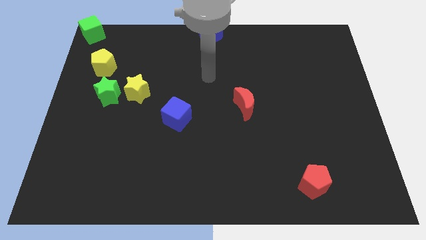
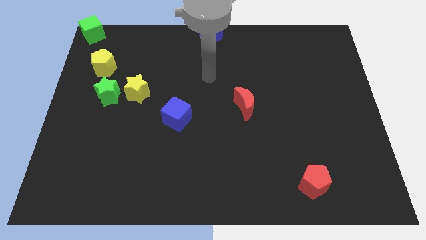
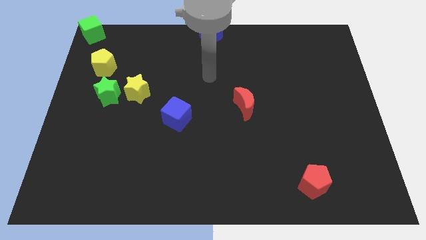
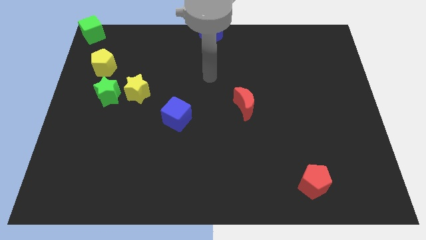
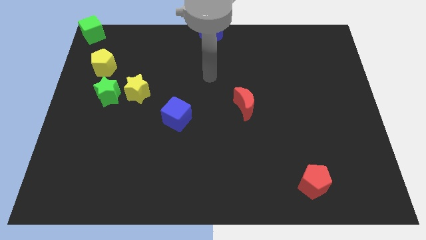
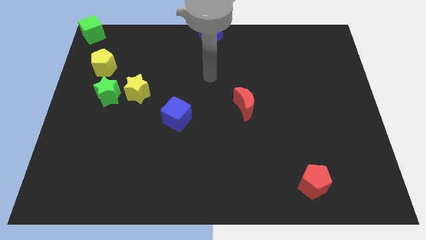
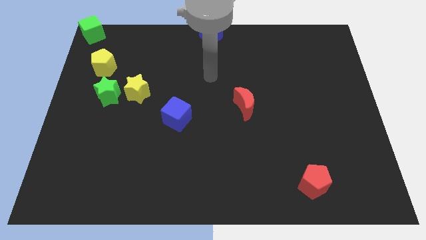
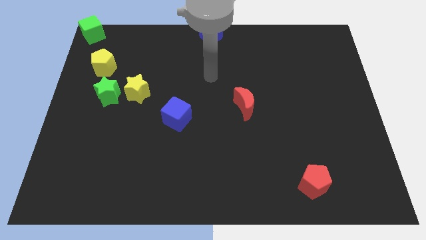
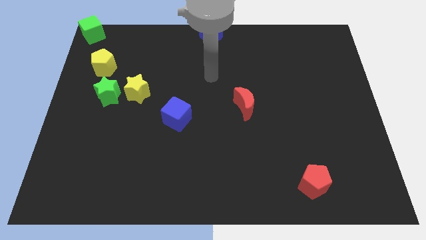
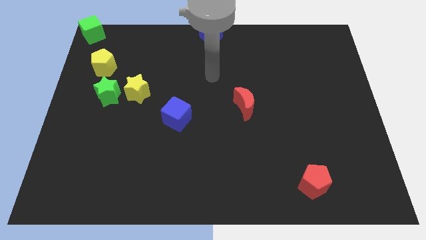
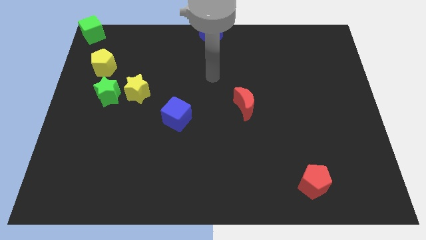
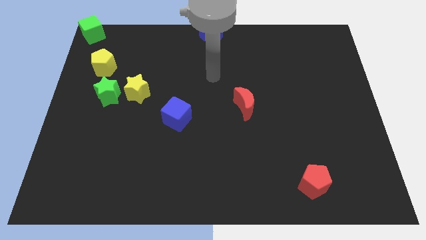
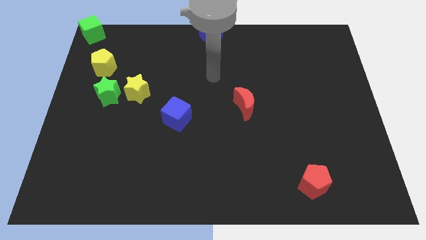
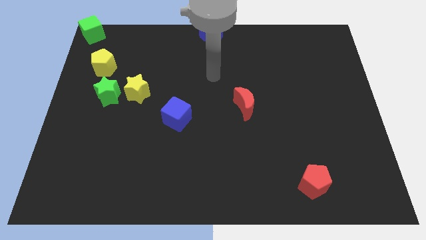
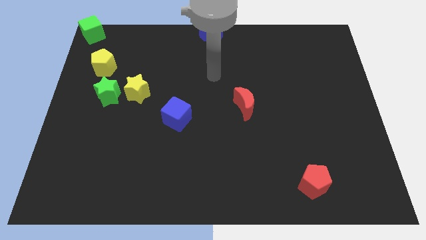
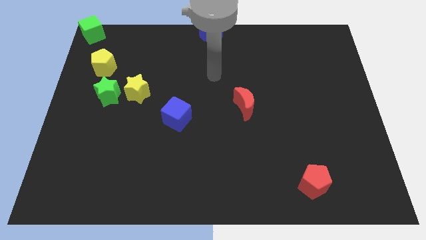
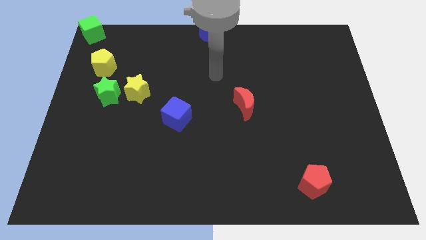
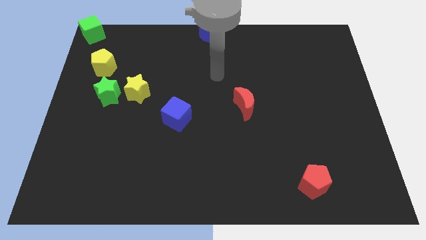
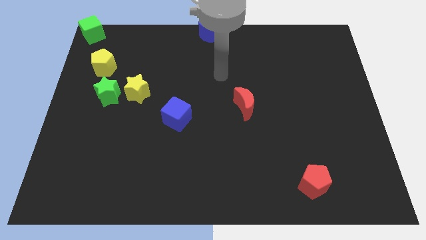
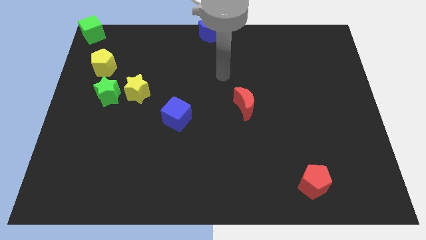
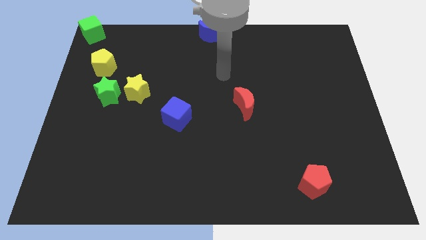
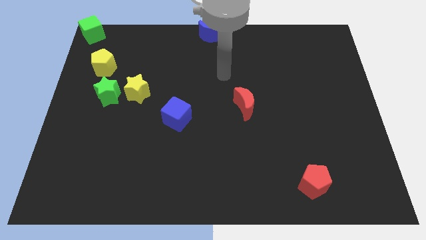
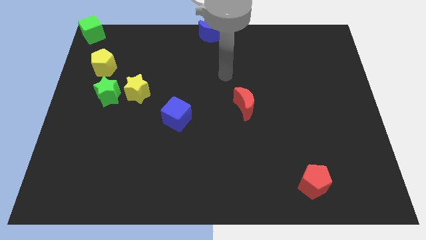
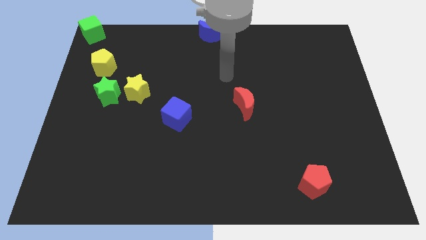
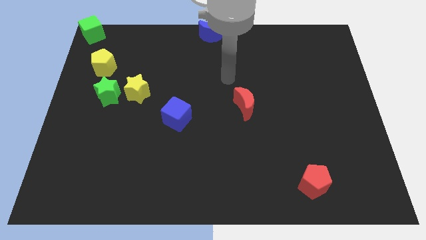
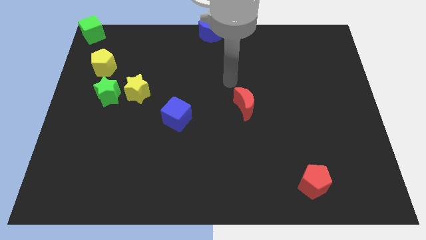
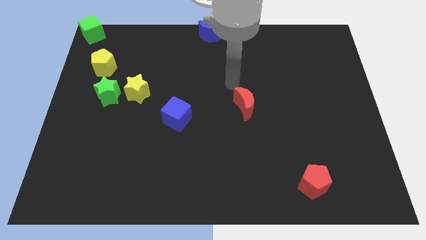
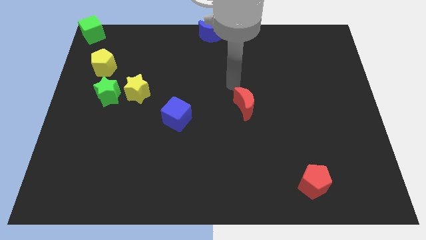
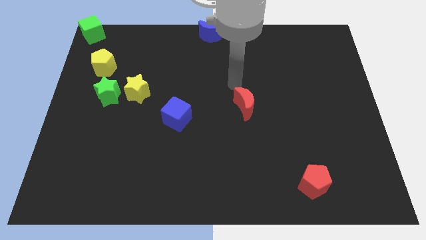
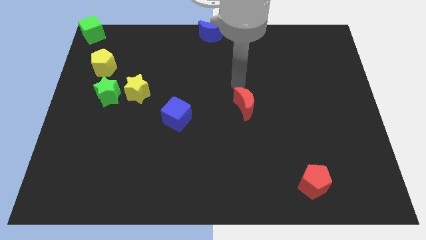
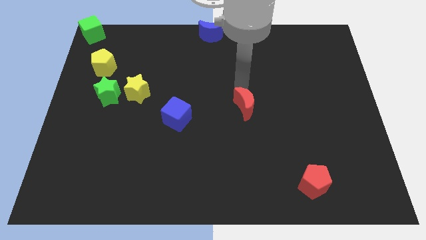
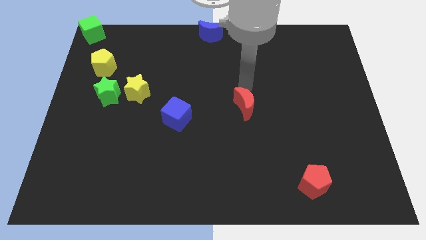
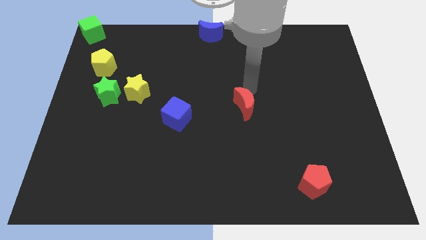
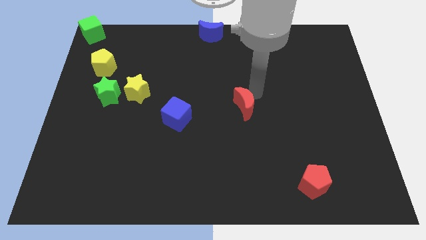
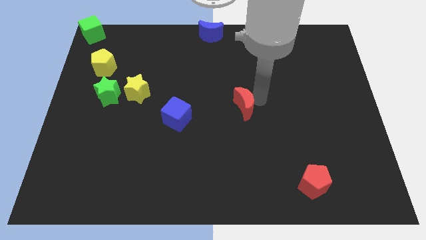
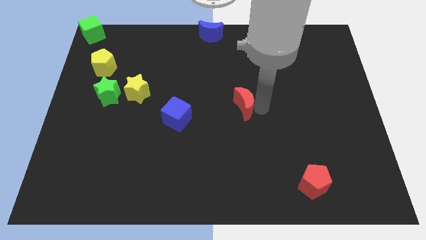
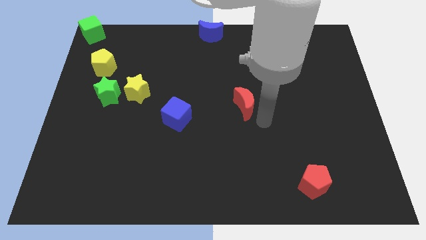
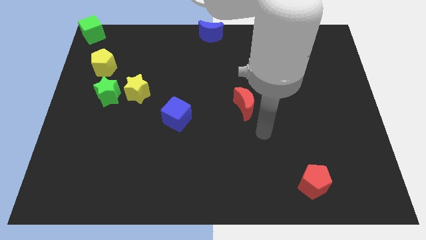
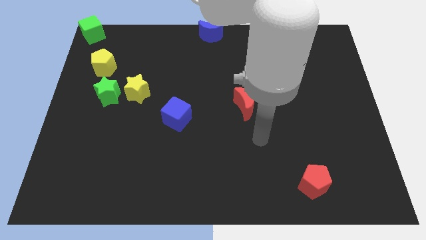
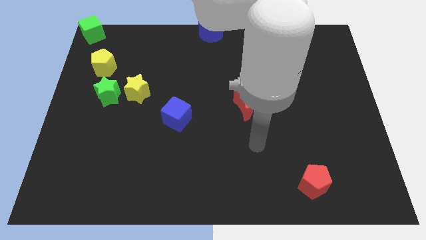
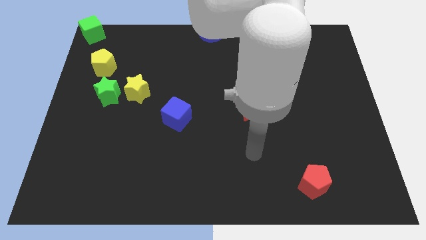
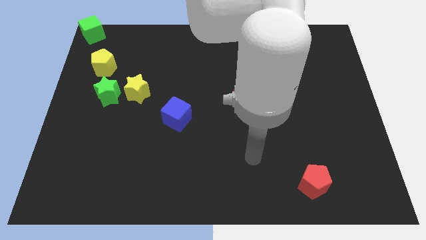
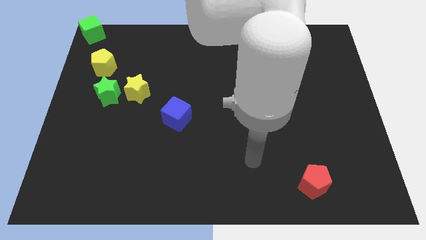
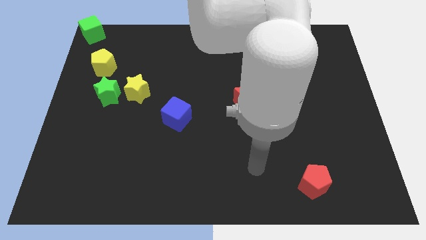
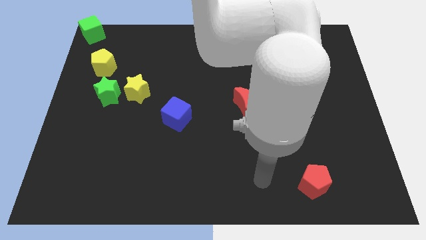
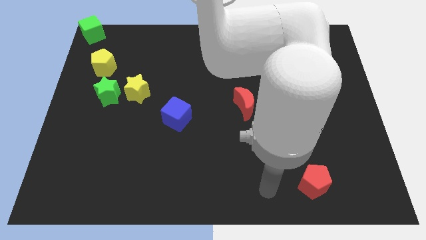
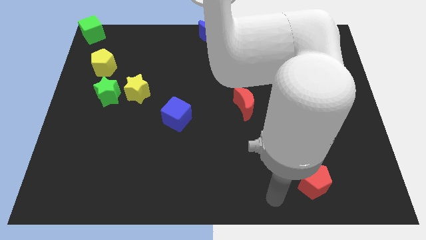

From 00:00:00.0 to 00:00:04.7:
move your arm towards the bottom of the board

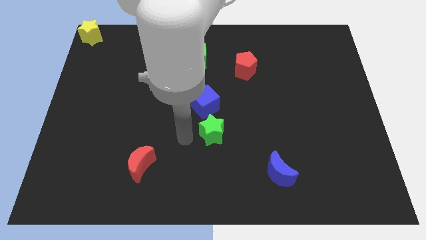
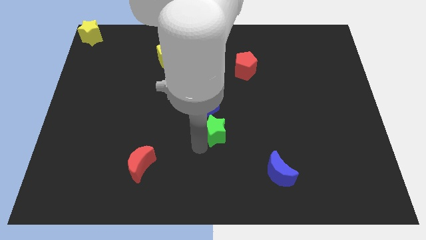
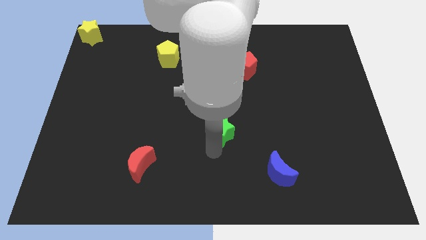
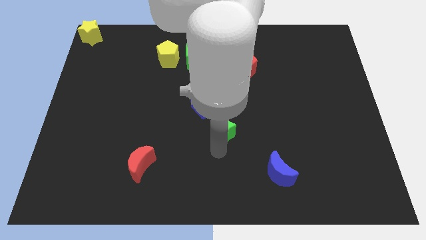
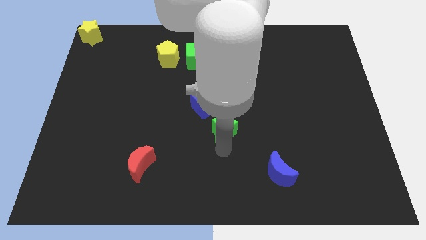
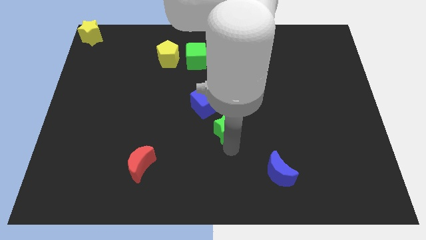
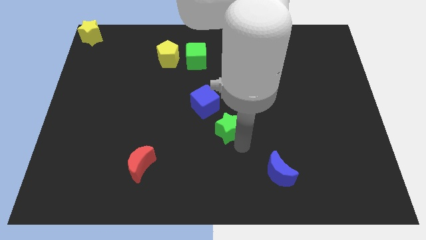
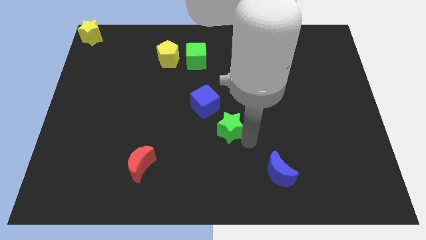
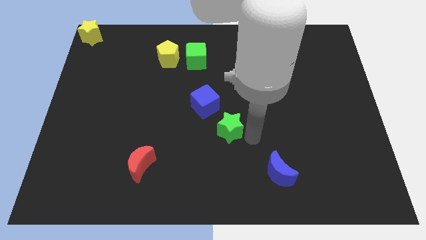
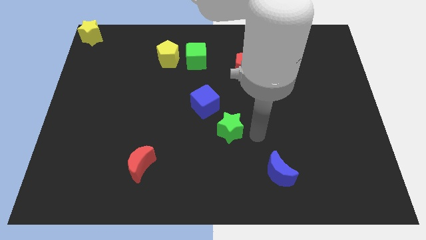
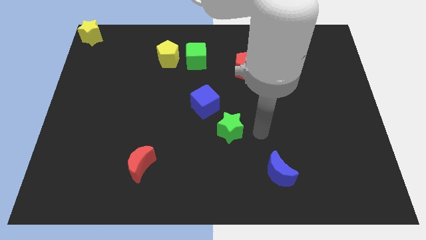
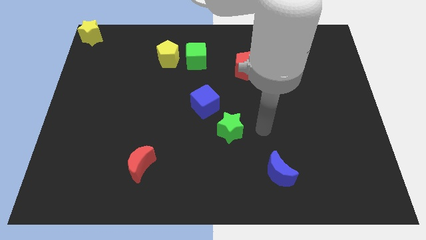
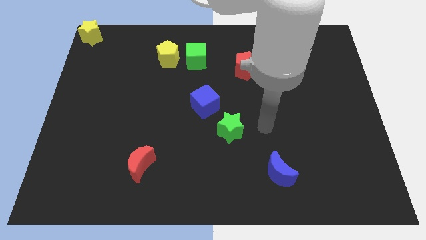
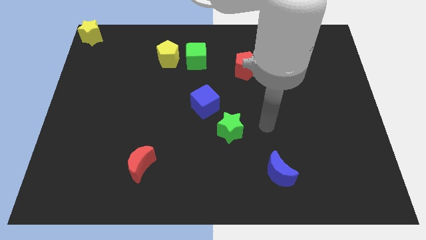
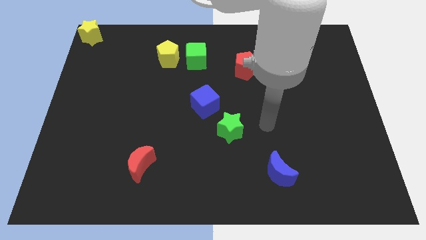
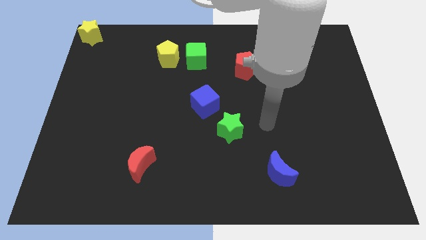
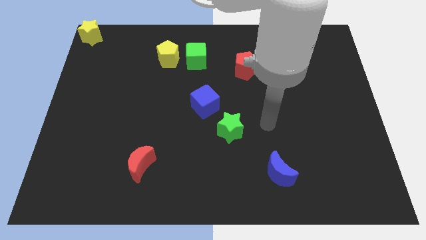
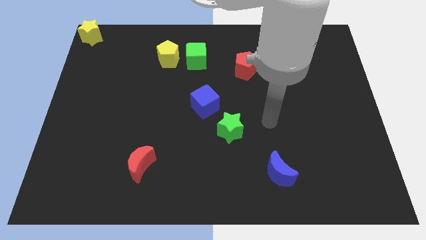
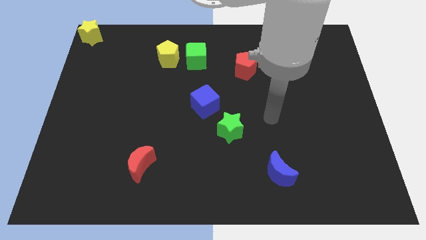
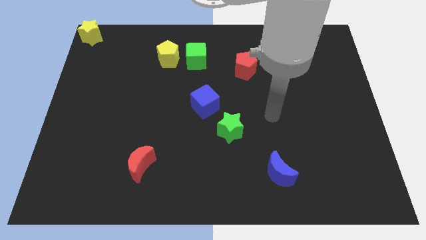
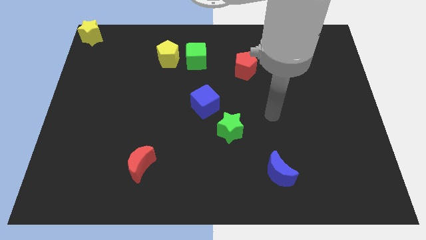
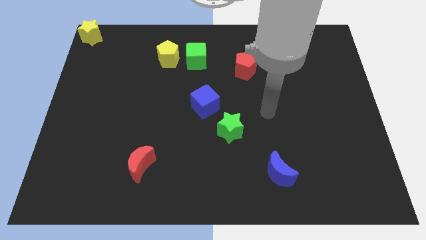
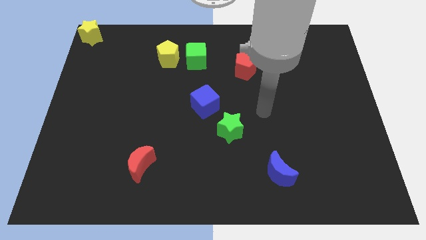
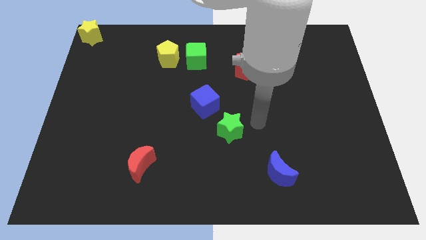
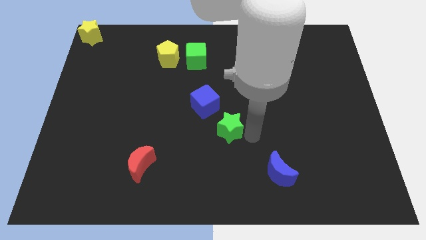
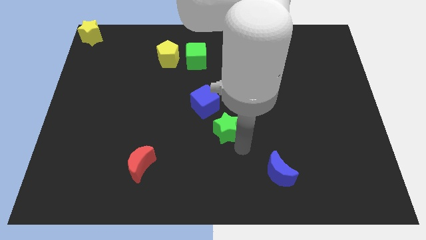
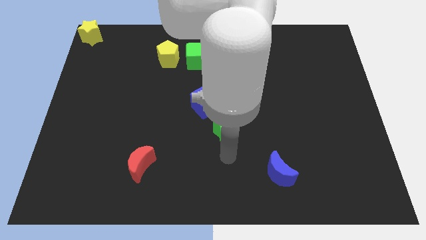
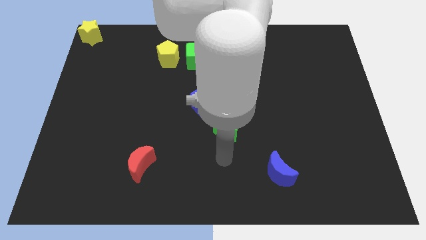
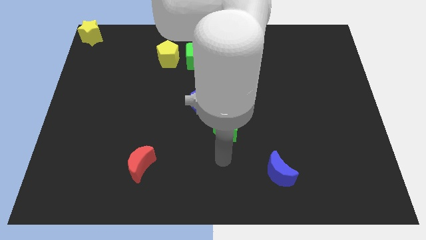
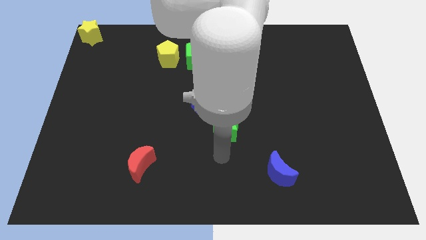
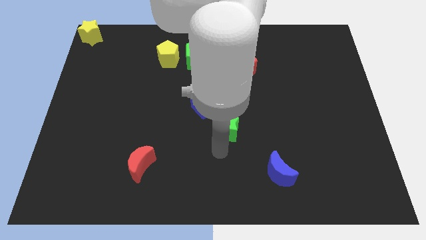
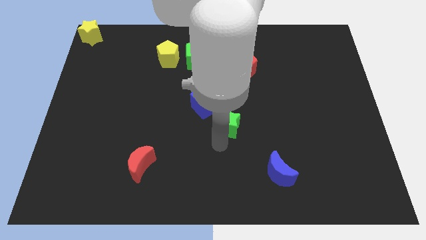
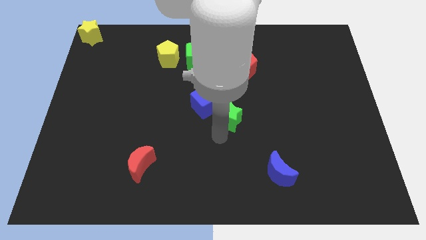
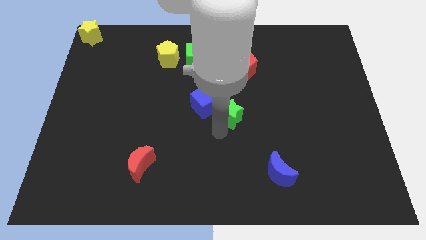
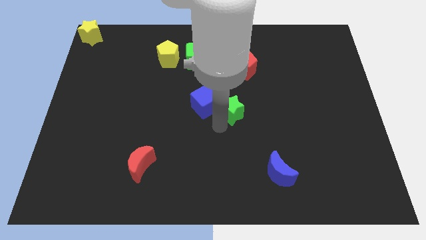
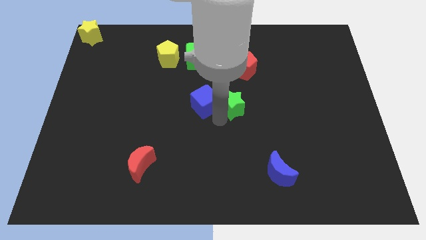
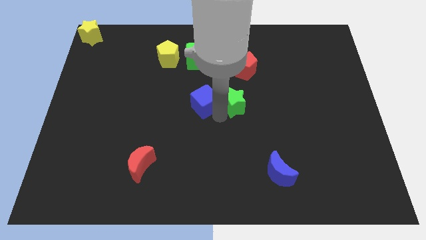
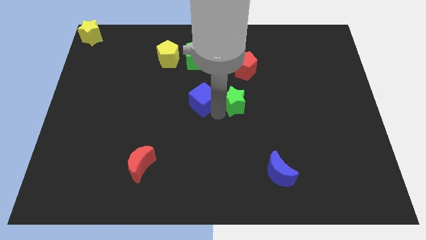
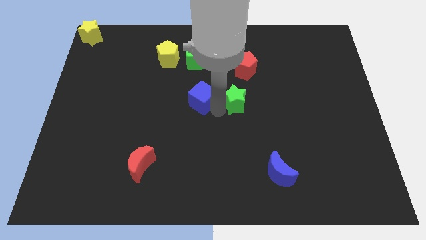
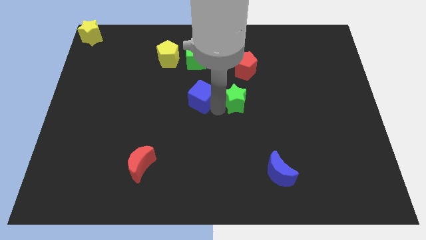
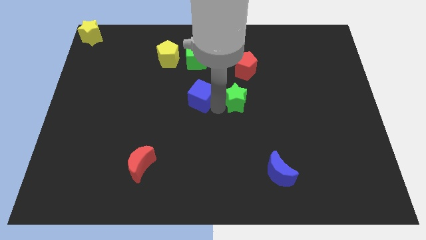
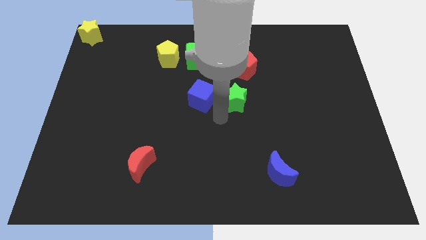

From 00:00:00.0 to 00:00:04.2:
push the green star towards the blue cube

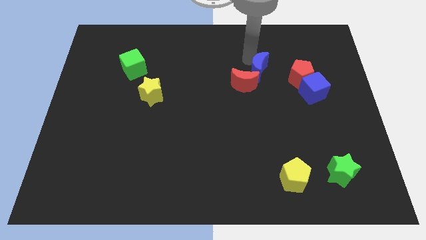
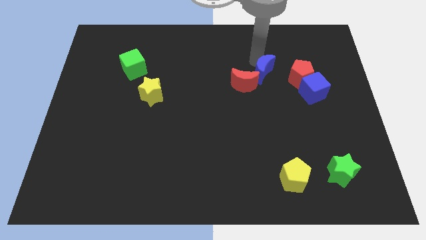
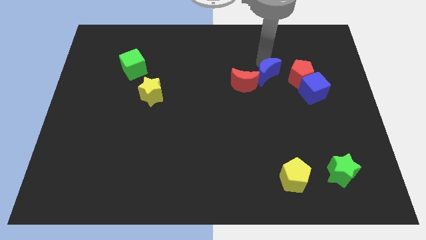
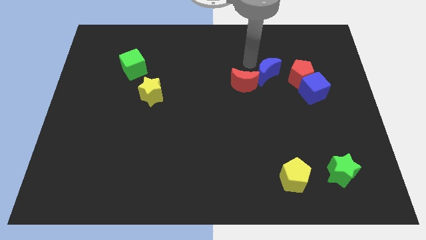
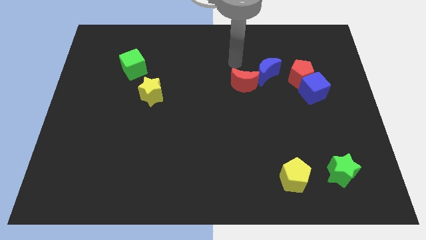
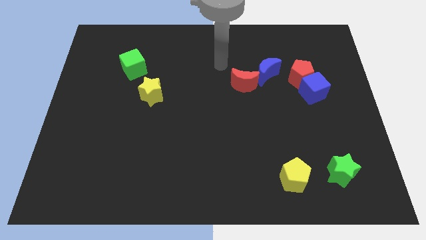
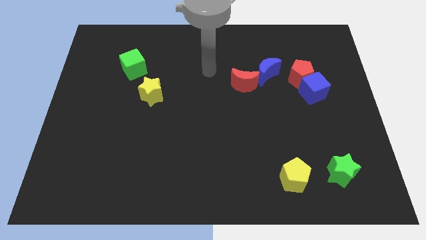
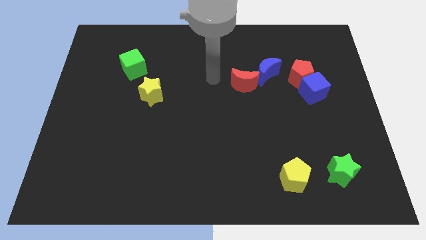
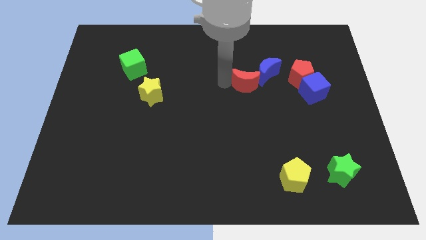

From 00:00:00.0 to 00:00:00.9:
slightly push the crescents to the left of the board
